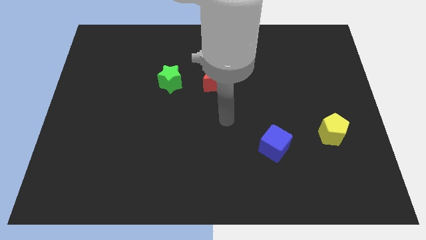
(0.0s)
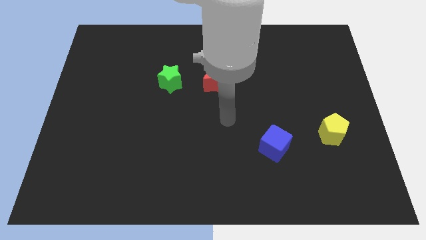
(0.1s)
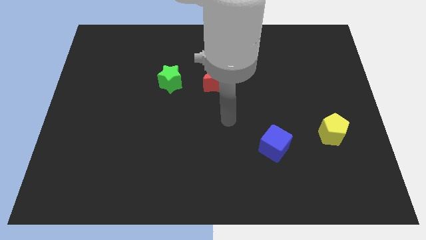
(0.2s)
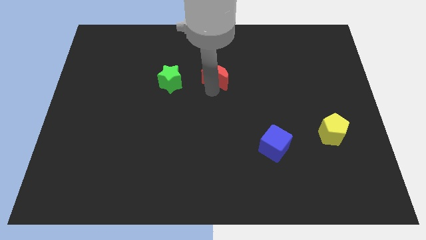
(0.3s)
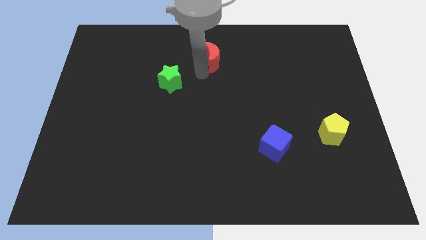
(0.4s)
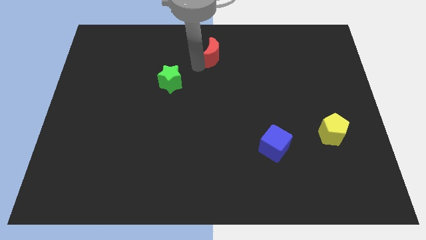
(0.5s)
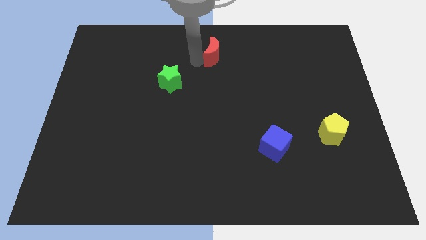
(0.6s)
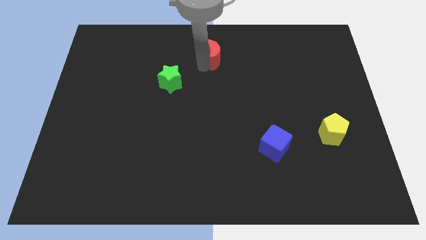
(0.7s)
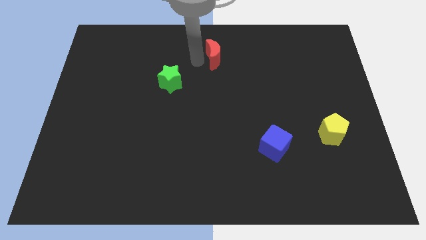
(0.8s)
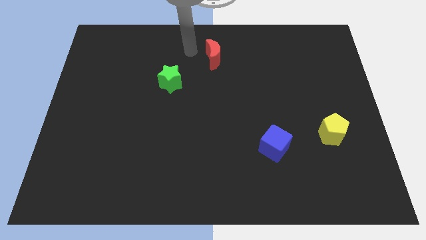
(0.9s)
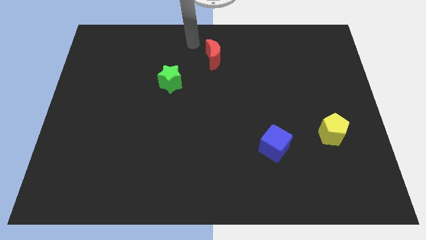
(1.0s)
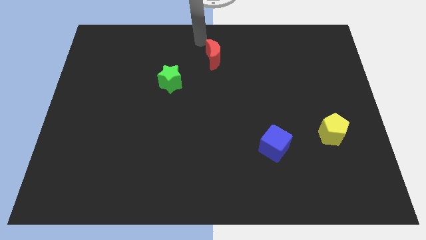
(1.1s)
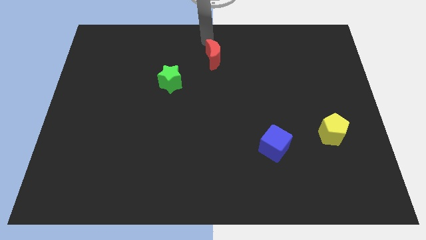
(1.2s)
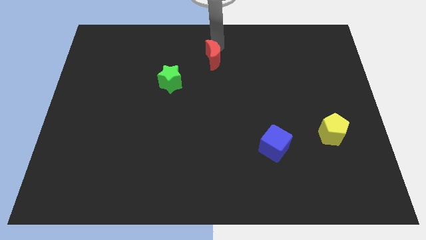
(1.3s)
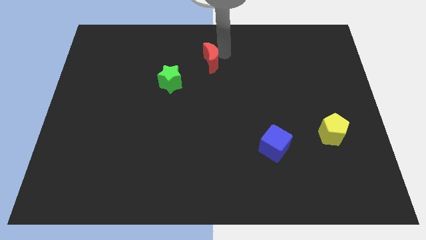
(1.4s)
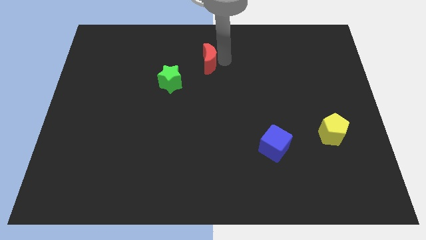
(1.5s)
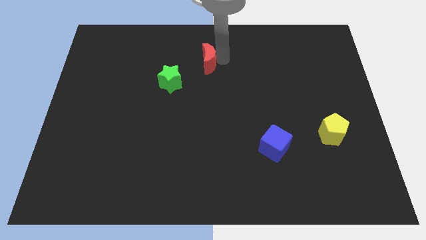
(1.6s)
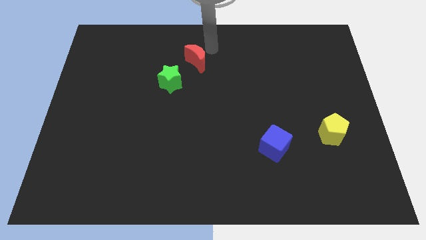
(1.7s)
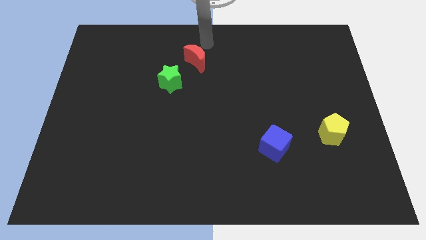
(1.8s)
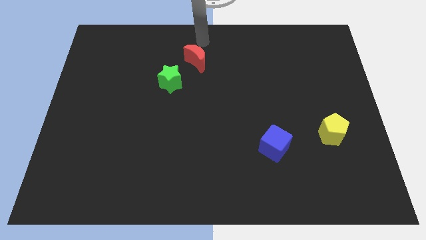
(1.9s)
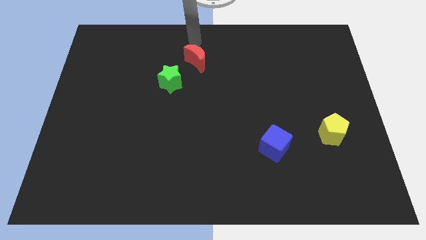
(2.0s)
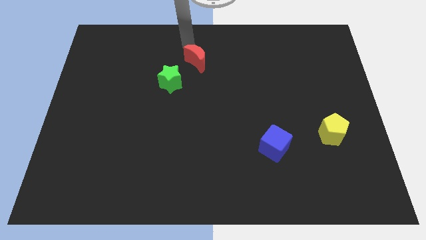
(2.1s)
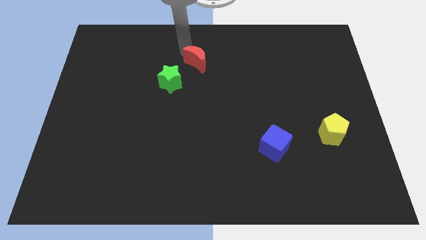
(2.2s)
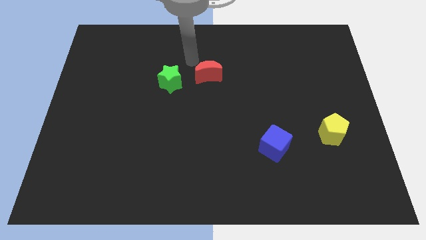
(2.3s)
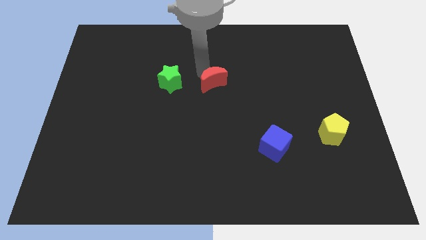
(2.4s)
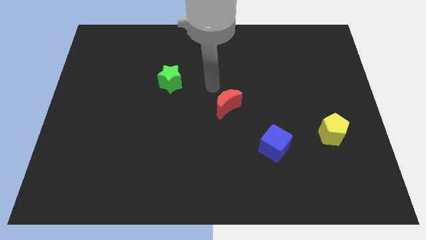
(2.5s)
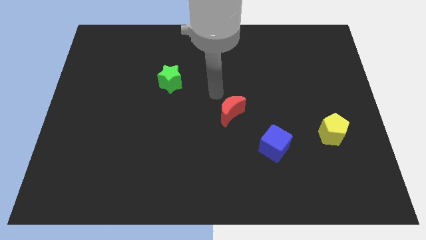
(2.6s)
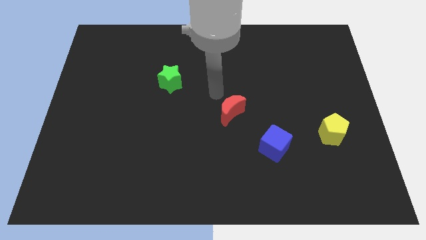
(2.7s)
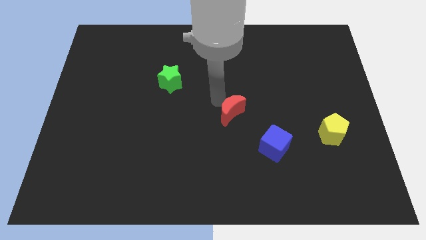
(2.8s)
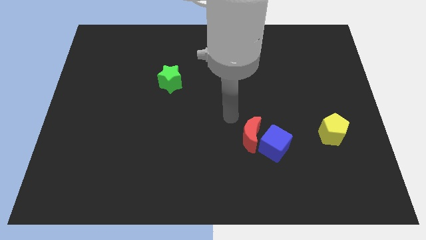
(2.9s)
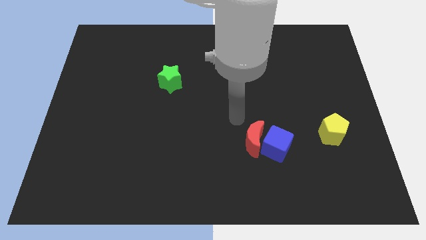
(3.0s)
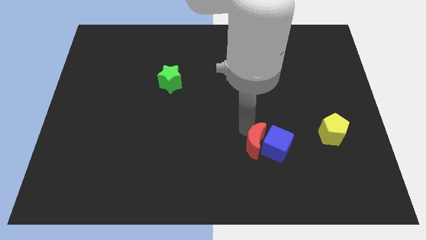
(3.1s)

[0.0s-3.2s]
push the red moon close to the cube

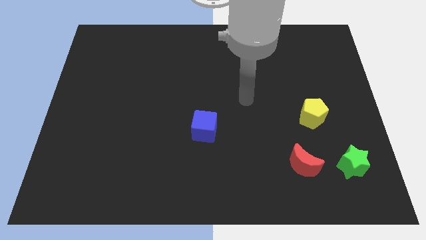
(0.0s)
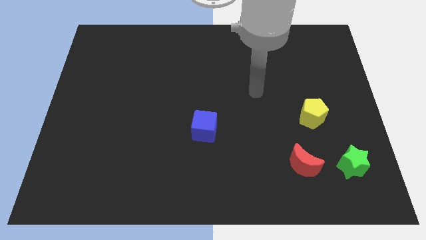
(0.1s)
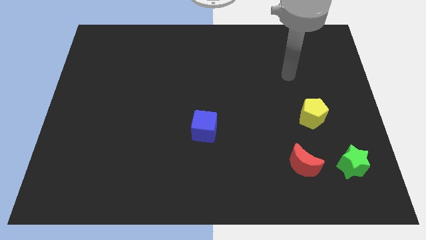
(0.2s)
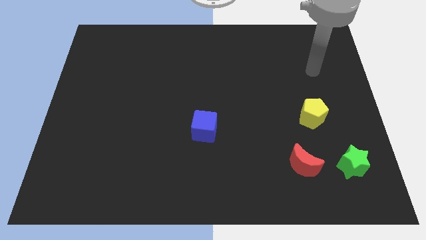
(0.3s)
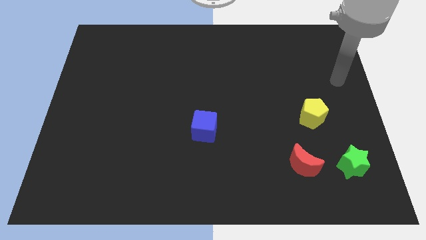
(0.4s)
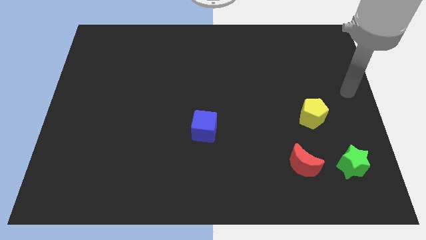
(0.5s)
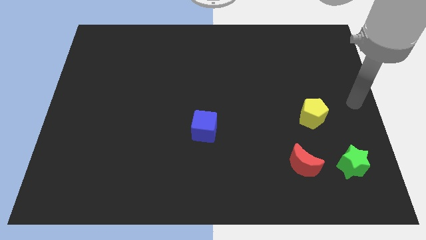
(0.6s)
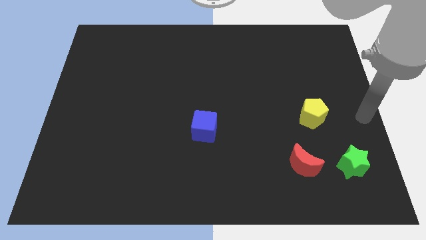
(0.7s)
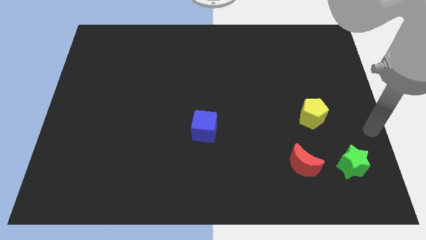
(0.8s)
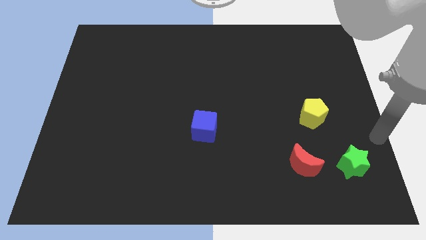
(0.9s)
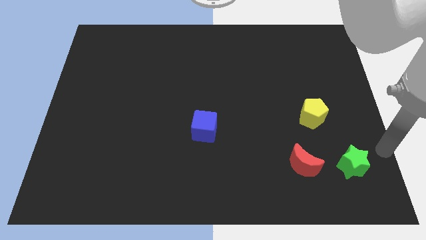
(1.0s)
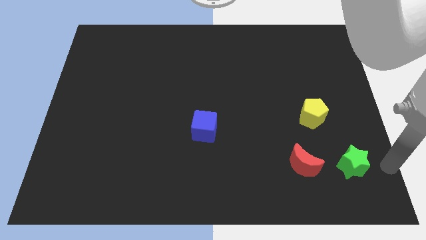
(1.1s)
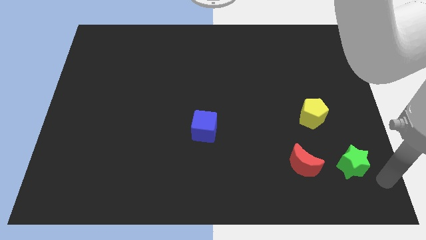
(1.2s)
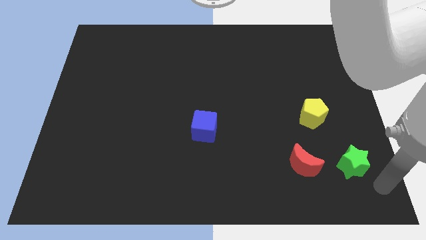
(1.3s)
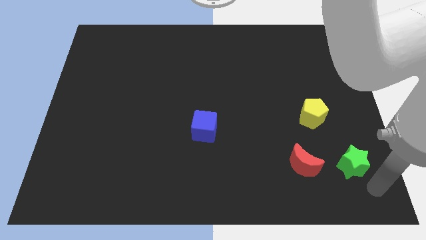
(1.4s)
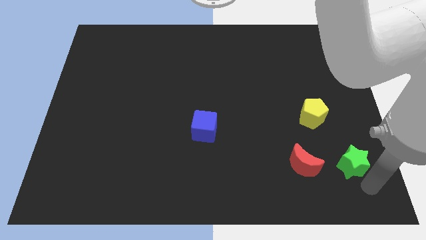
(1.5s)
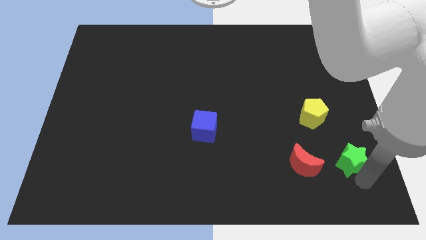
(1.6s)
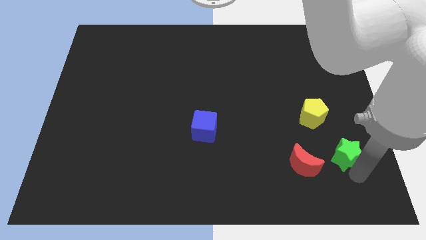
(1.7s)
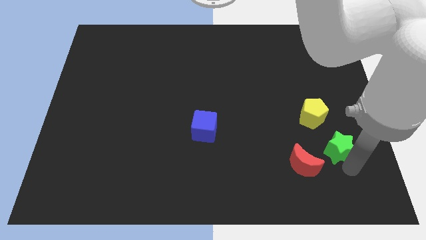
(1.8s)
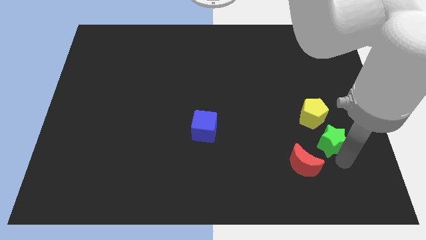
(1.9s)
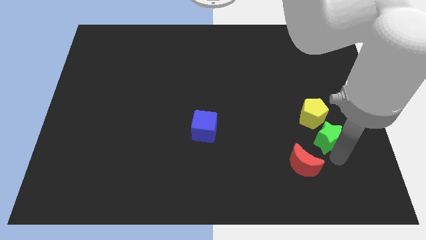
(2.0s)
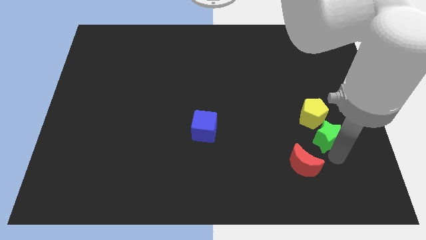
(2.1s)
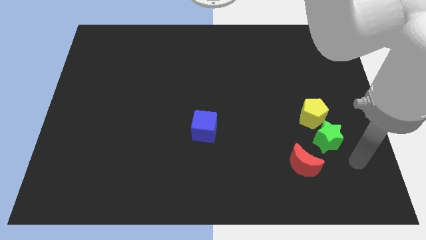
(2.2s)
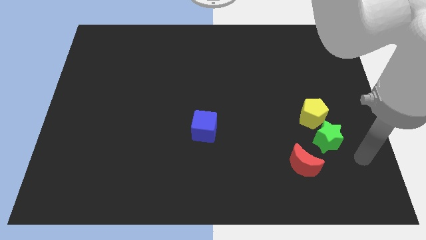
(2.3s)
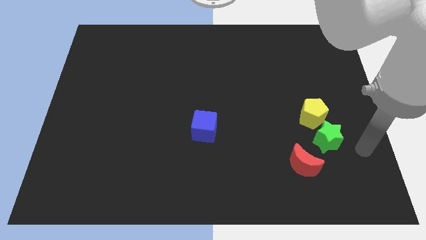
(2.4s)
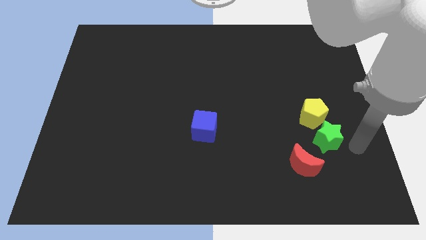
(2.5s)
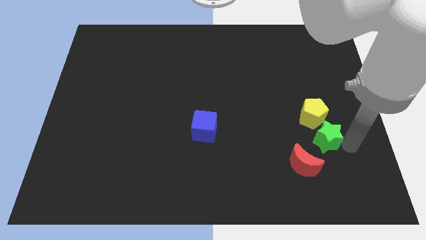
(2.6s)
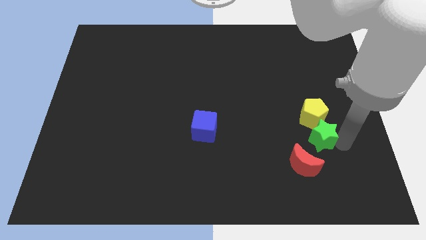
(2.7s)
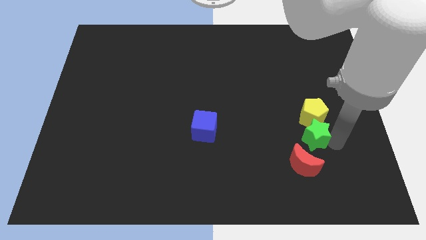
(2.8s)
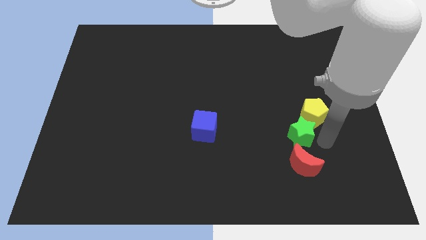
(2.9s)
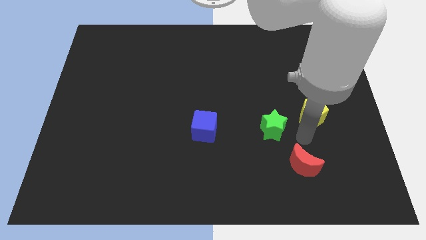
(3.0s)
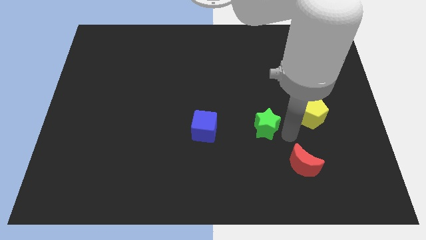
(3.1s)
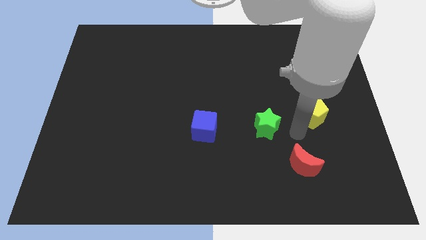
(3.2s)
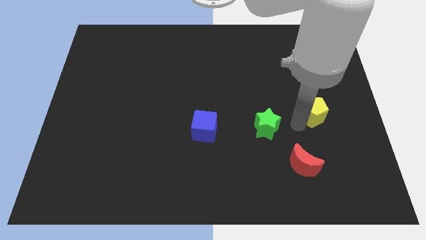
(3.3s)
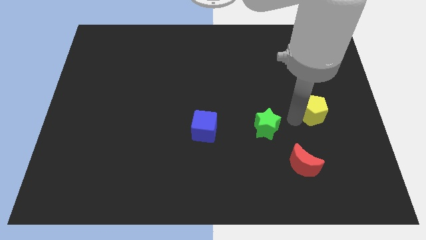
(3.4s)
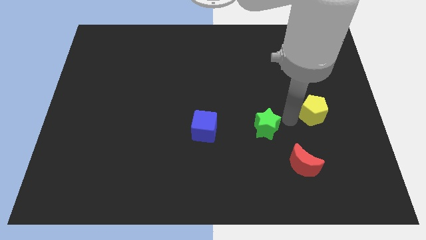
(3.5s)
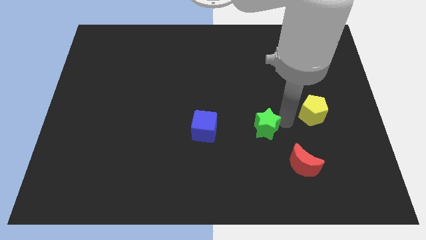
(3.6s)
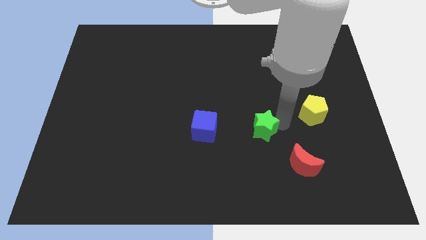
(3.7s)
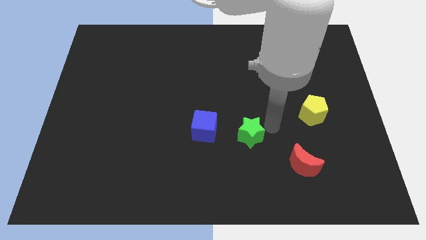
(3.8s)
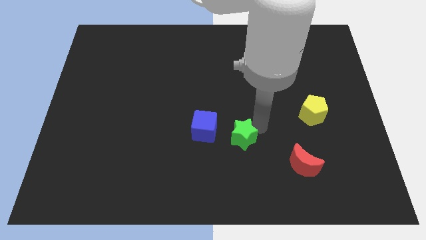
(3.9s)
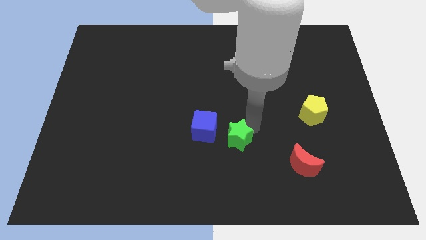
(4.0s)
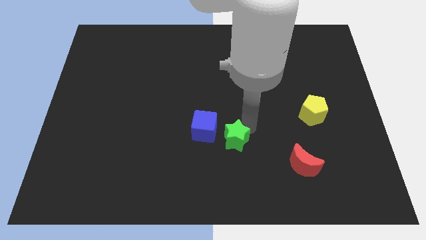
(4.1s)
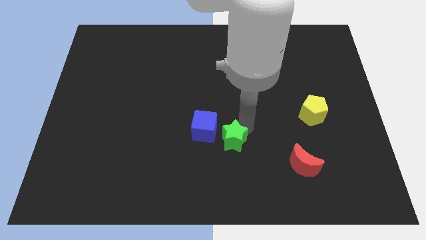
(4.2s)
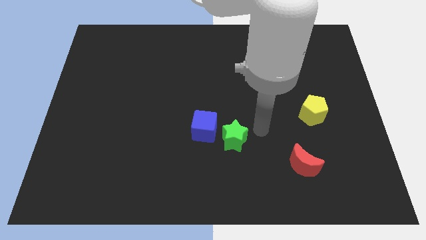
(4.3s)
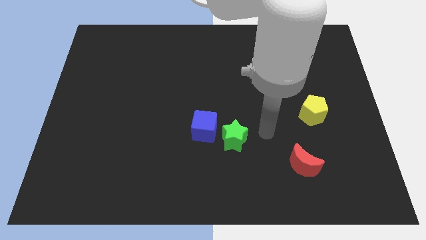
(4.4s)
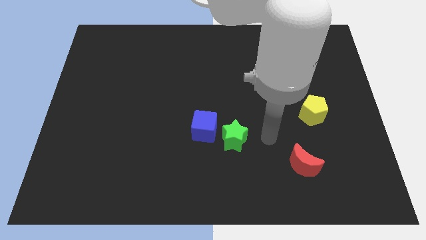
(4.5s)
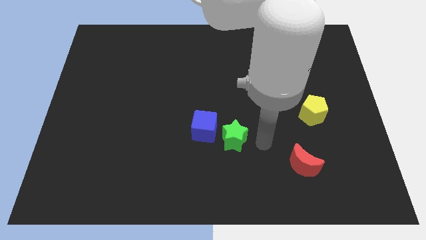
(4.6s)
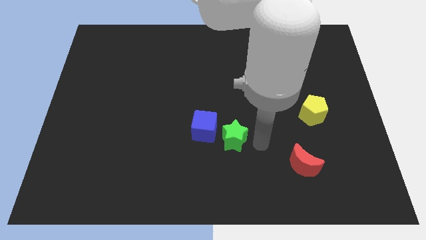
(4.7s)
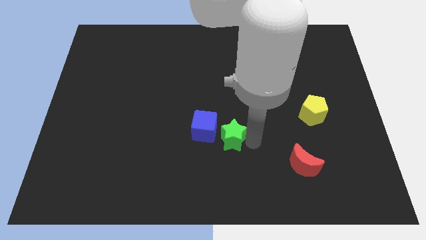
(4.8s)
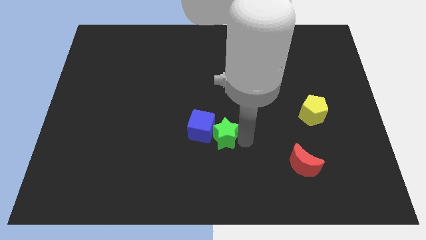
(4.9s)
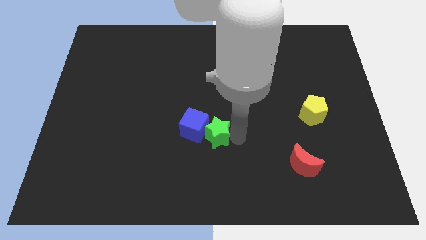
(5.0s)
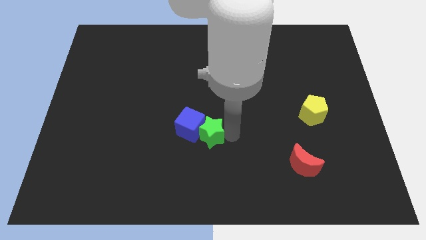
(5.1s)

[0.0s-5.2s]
push the green star next to the blue block
